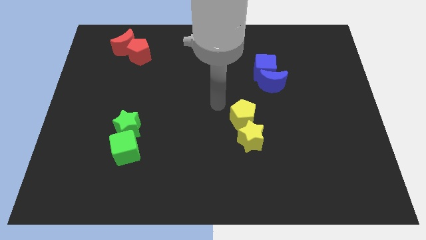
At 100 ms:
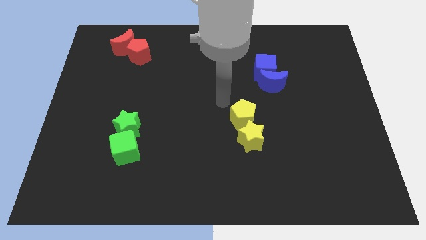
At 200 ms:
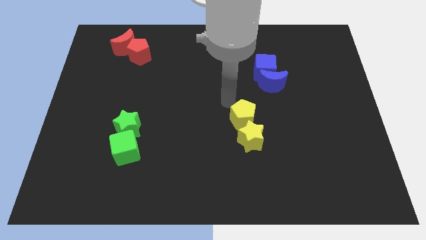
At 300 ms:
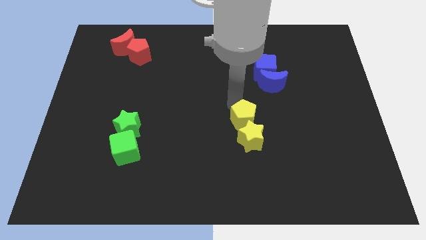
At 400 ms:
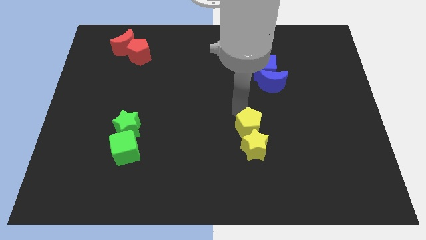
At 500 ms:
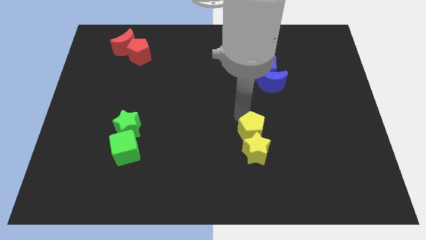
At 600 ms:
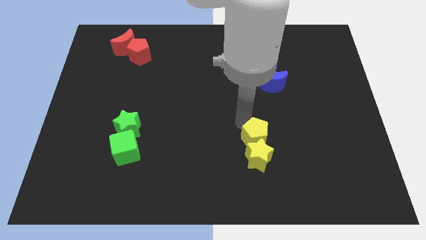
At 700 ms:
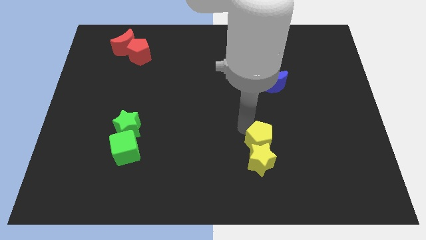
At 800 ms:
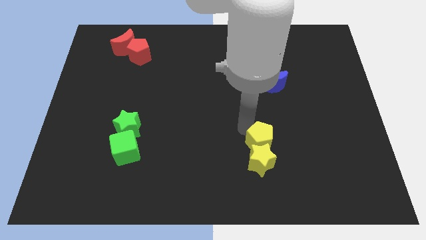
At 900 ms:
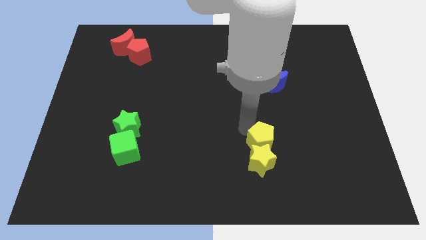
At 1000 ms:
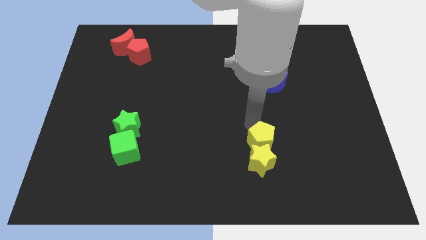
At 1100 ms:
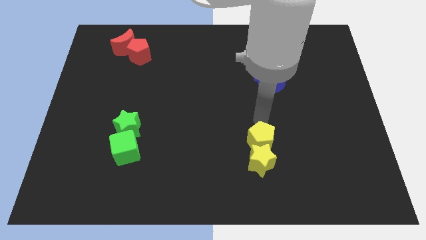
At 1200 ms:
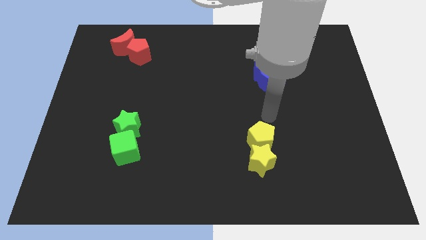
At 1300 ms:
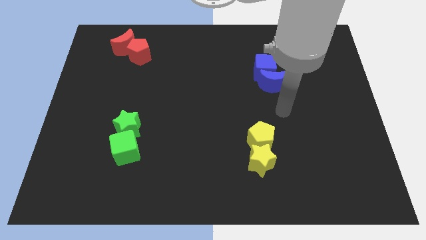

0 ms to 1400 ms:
push the yellow pentagon above the yellow star

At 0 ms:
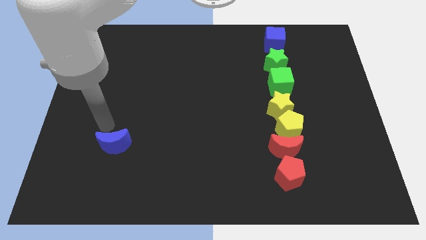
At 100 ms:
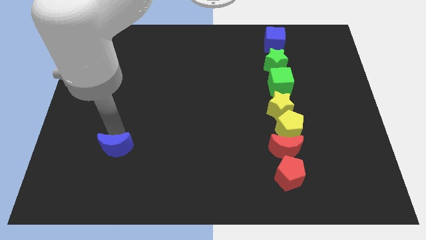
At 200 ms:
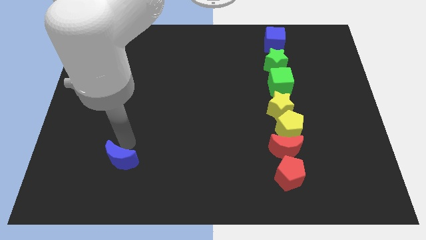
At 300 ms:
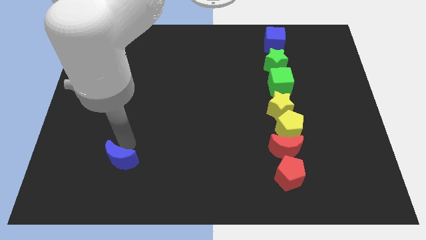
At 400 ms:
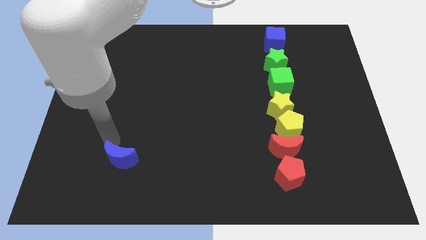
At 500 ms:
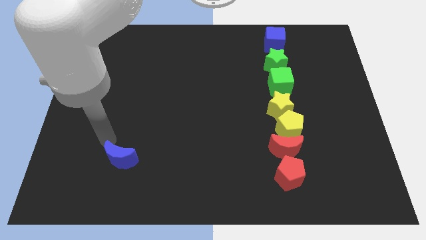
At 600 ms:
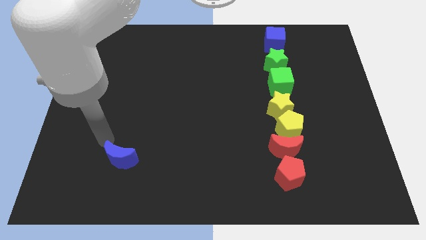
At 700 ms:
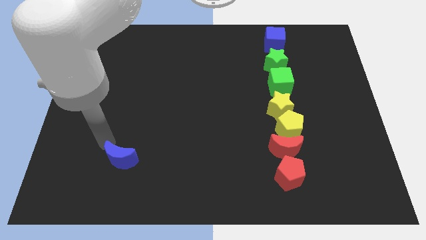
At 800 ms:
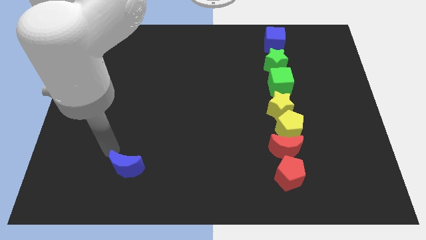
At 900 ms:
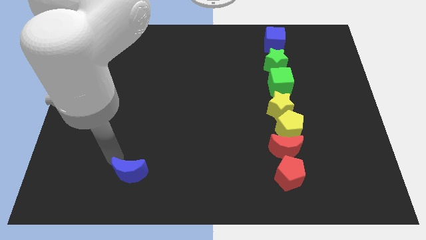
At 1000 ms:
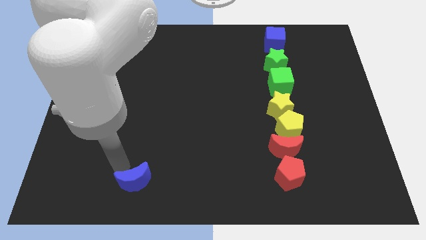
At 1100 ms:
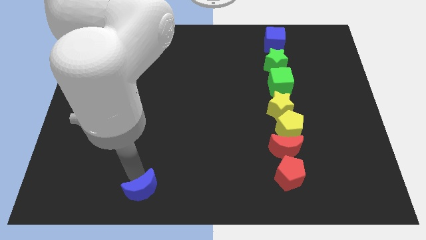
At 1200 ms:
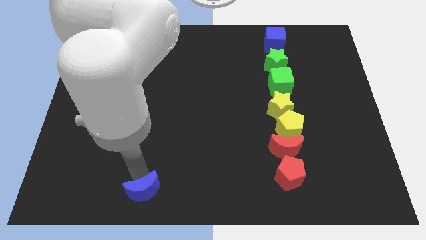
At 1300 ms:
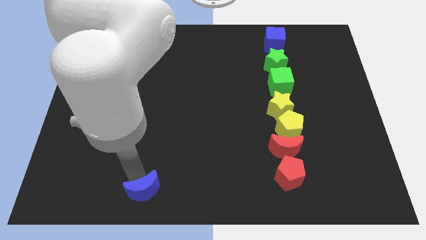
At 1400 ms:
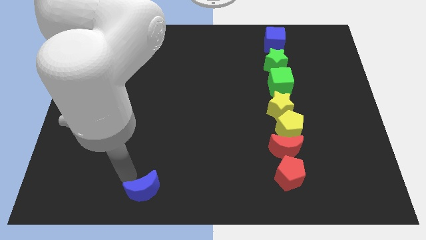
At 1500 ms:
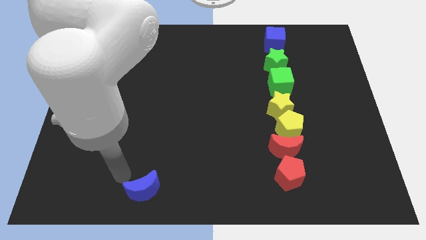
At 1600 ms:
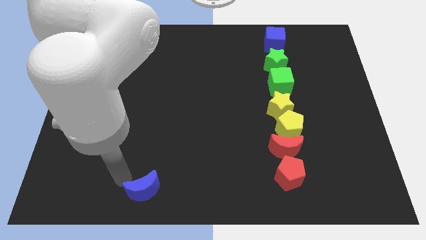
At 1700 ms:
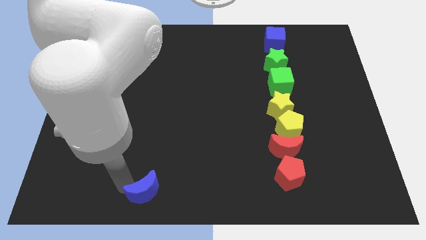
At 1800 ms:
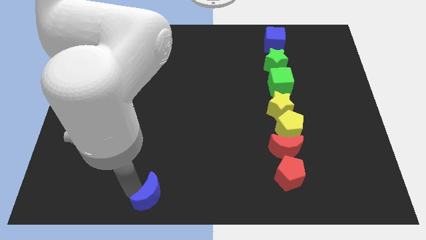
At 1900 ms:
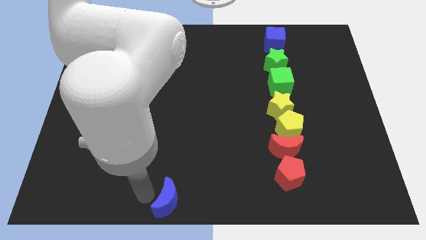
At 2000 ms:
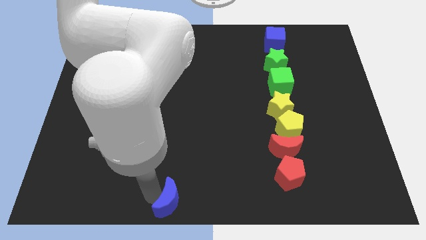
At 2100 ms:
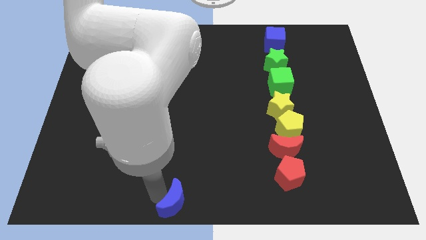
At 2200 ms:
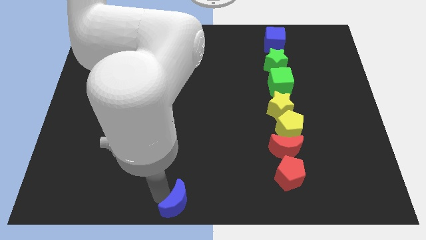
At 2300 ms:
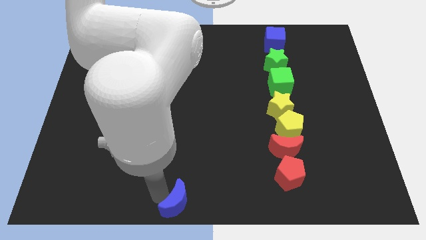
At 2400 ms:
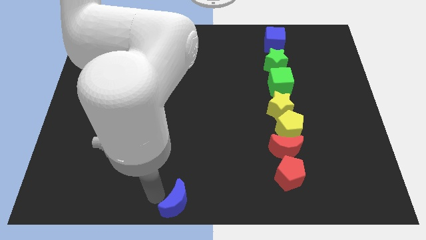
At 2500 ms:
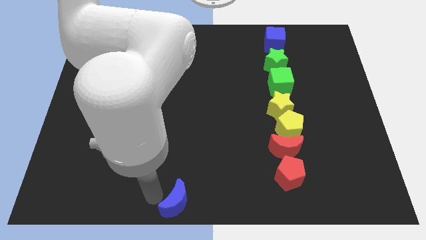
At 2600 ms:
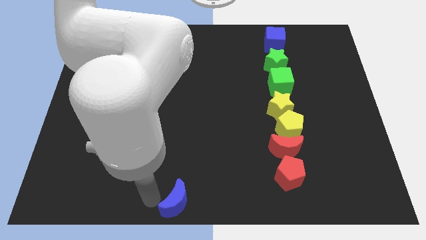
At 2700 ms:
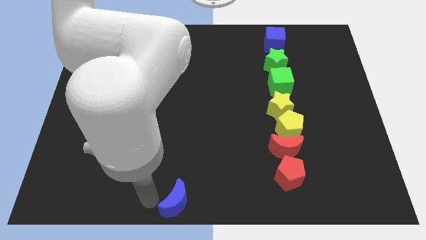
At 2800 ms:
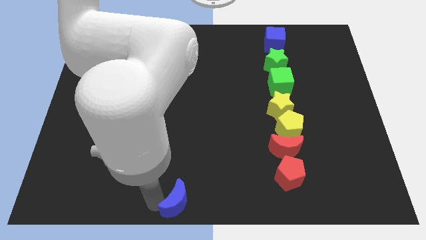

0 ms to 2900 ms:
place the blue moon to the bottom center of the board

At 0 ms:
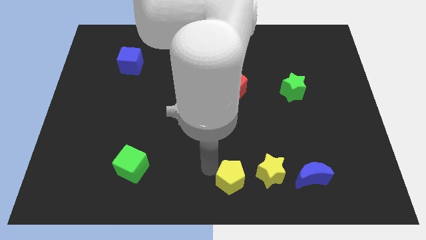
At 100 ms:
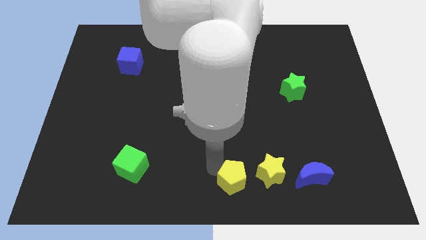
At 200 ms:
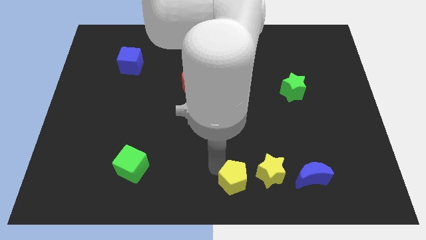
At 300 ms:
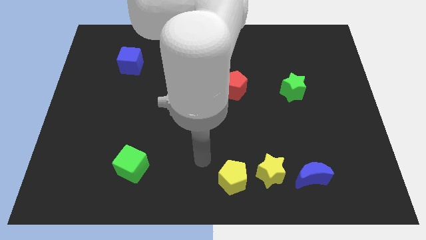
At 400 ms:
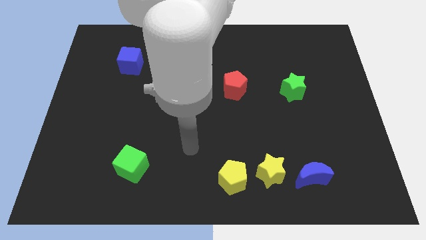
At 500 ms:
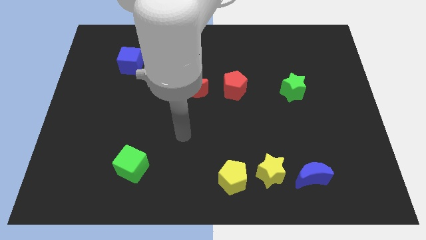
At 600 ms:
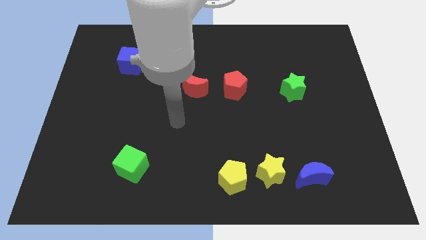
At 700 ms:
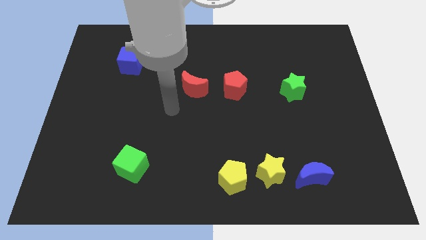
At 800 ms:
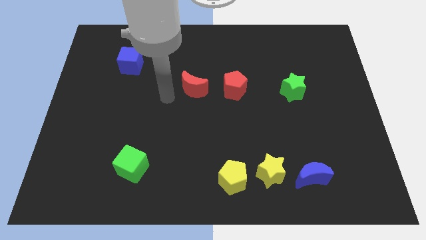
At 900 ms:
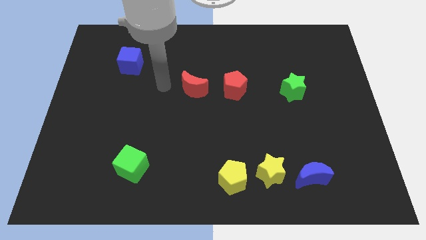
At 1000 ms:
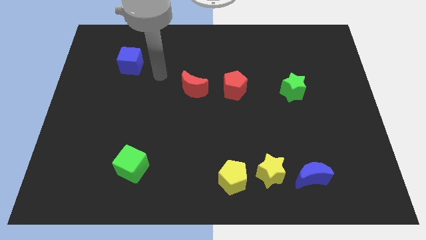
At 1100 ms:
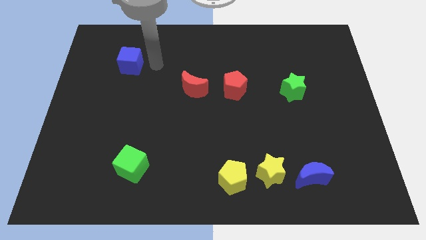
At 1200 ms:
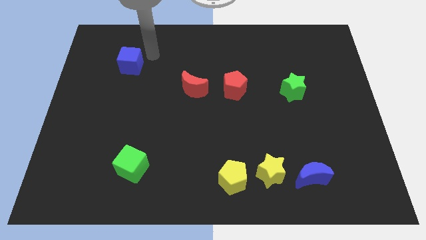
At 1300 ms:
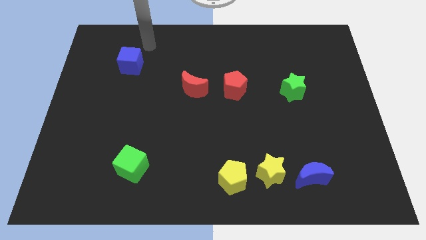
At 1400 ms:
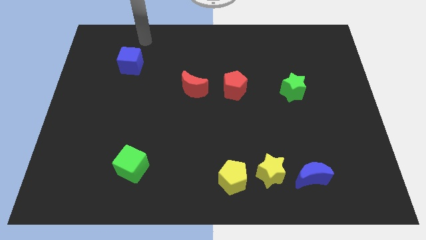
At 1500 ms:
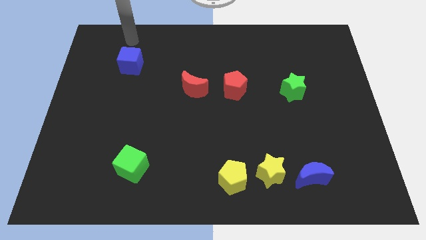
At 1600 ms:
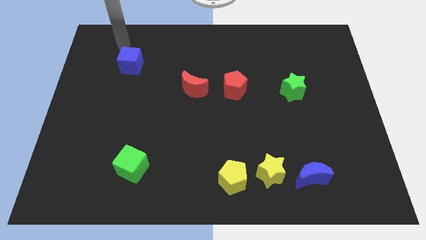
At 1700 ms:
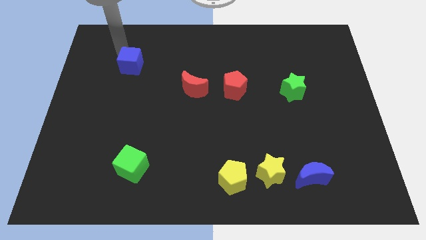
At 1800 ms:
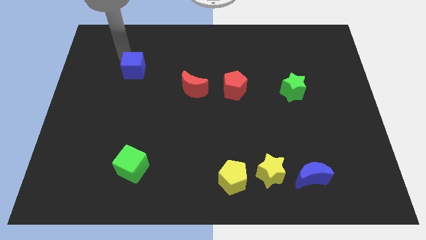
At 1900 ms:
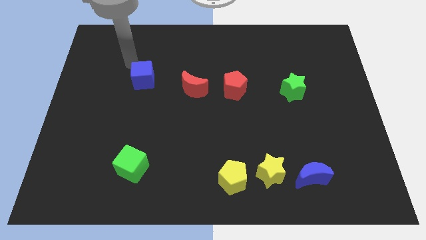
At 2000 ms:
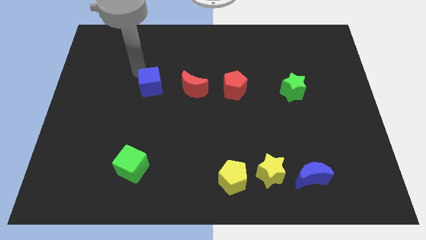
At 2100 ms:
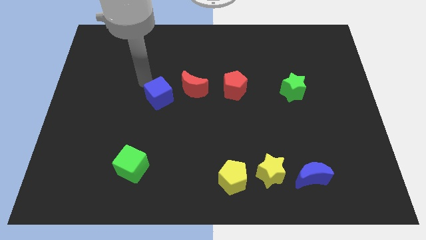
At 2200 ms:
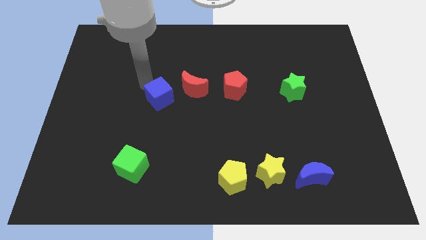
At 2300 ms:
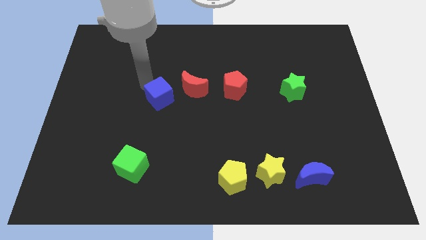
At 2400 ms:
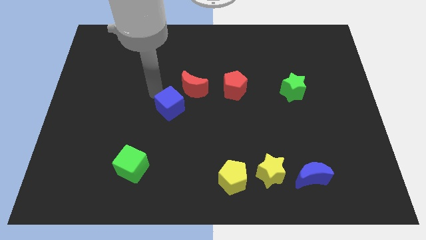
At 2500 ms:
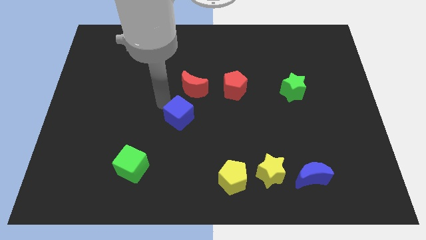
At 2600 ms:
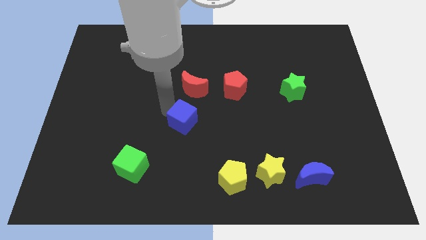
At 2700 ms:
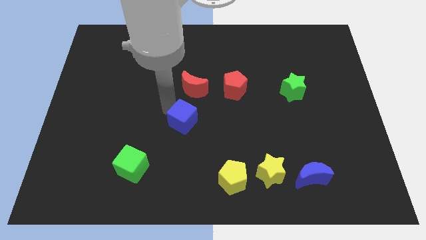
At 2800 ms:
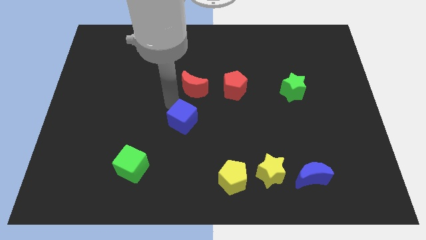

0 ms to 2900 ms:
place the blue cube down to the red moon

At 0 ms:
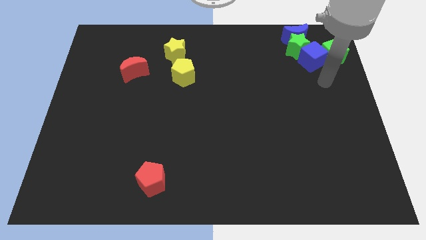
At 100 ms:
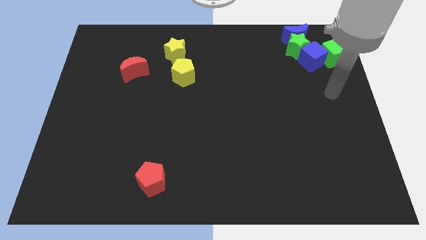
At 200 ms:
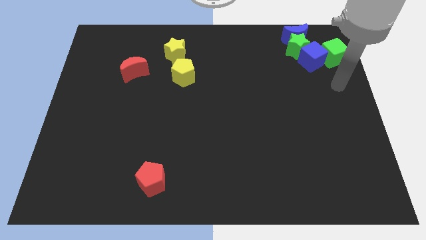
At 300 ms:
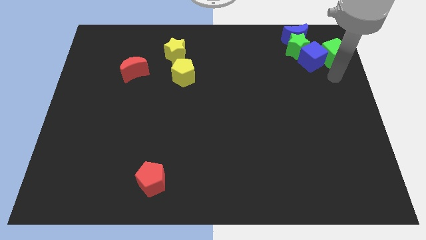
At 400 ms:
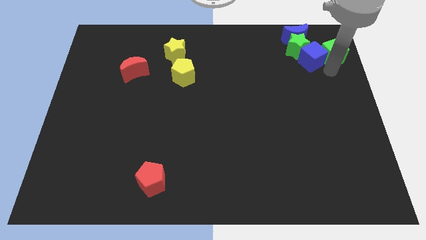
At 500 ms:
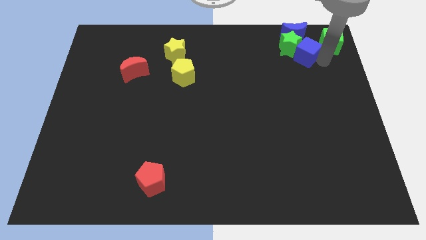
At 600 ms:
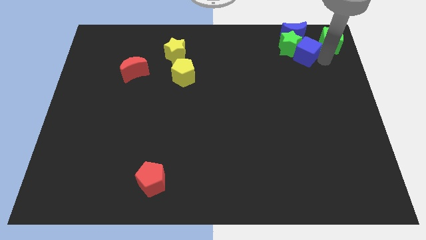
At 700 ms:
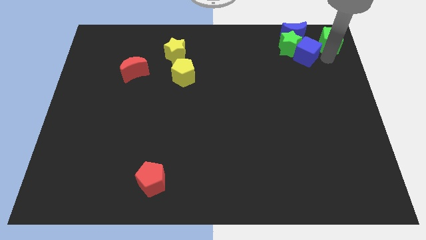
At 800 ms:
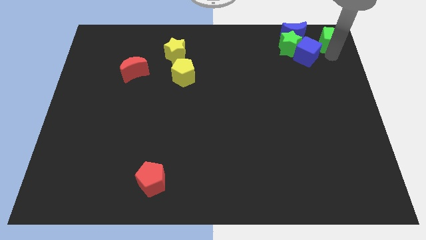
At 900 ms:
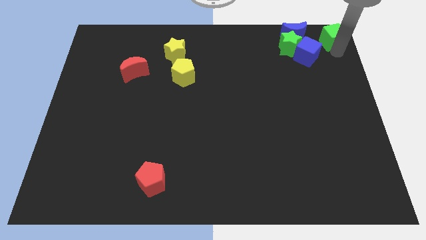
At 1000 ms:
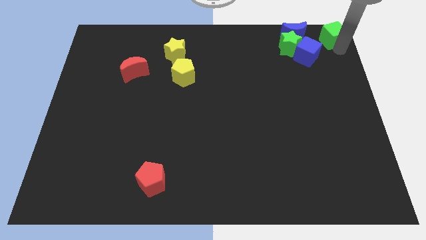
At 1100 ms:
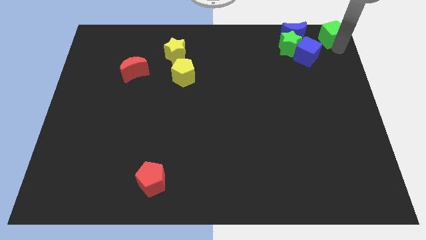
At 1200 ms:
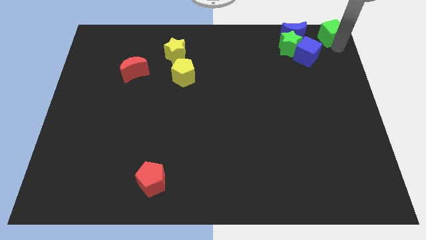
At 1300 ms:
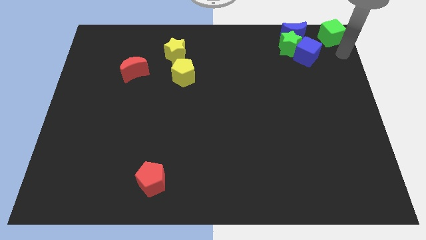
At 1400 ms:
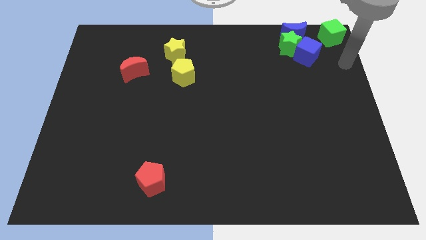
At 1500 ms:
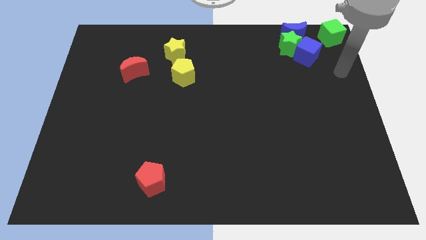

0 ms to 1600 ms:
push the green cube to the top right corner
